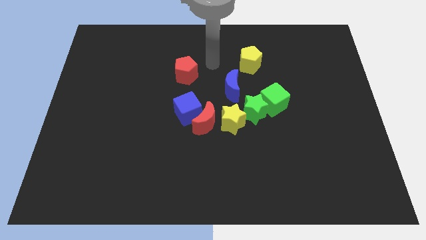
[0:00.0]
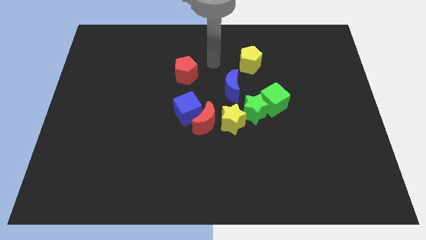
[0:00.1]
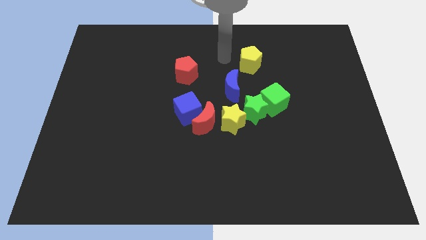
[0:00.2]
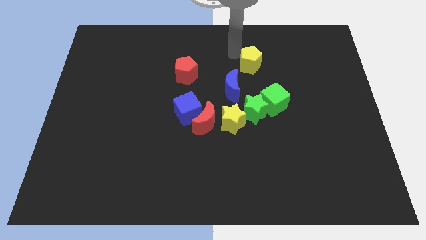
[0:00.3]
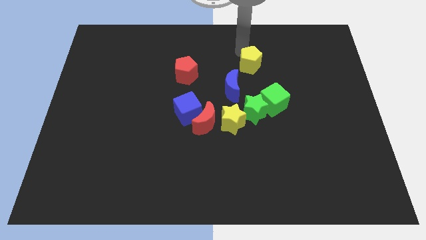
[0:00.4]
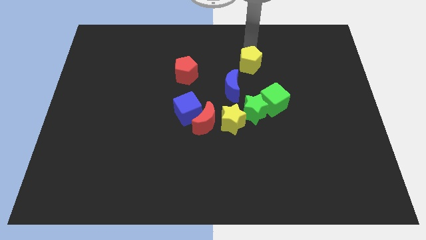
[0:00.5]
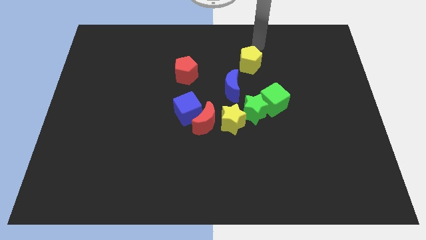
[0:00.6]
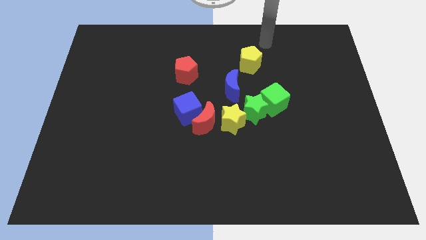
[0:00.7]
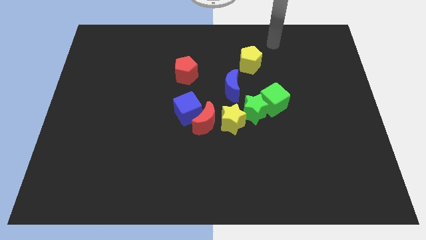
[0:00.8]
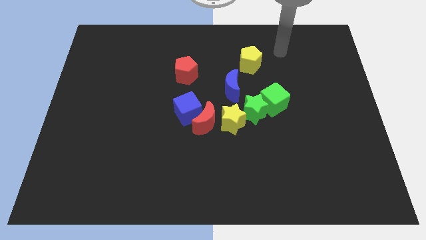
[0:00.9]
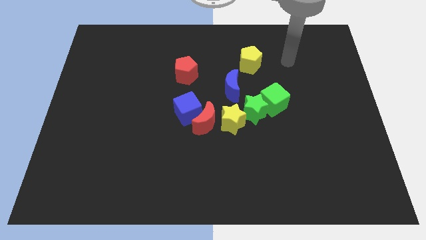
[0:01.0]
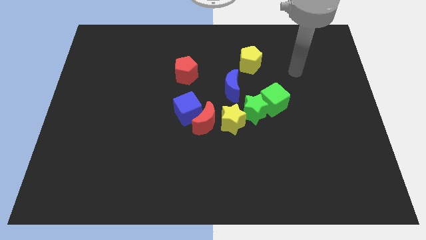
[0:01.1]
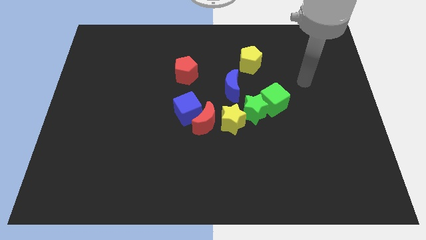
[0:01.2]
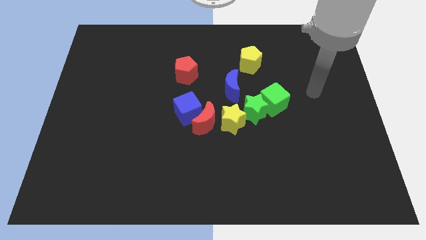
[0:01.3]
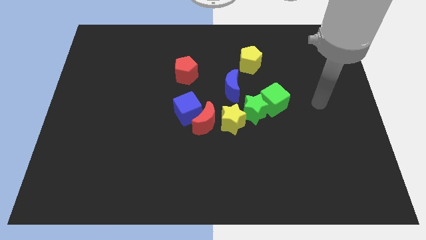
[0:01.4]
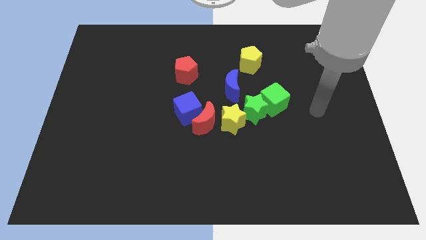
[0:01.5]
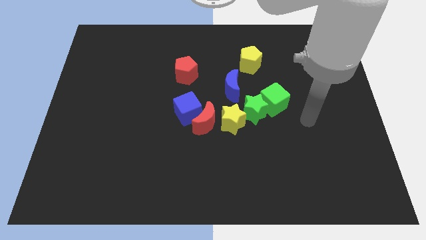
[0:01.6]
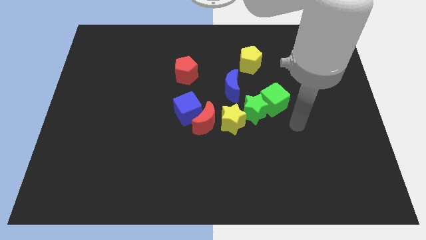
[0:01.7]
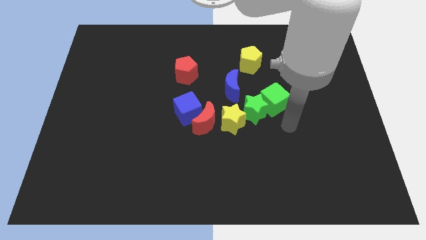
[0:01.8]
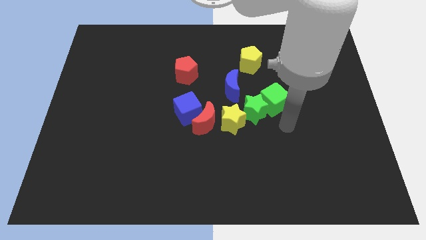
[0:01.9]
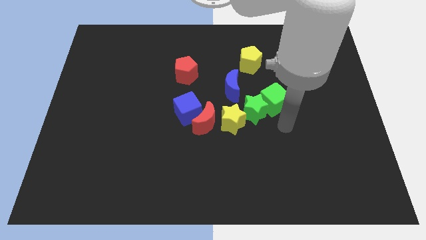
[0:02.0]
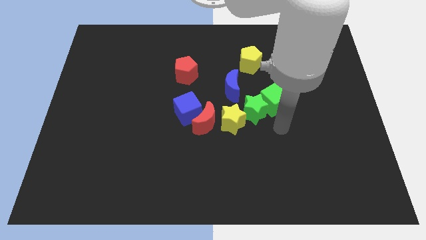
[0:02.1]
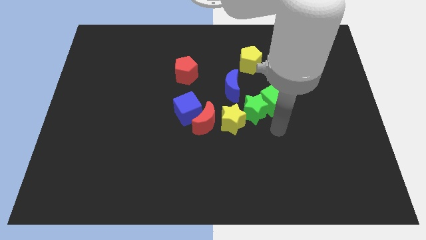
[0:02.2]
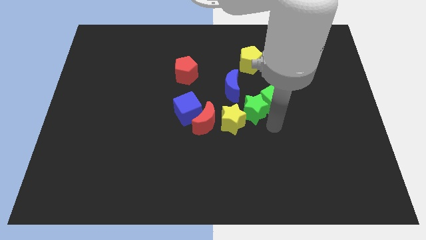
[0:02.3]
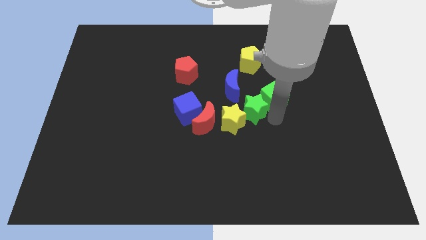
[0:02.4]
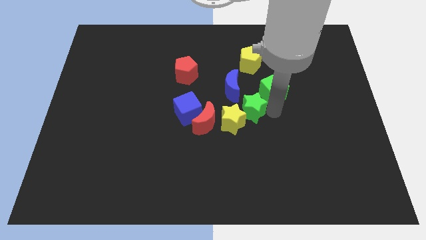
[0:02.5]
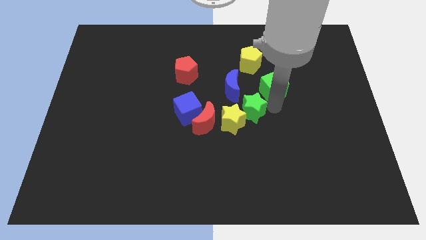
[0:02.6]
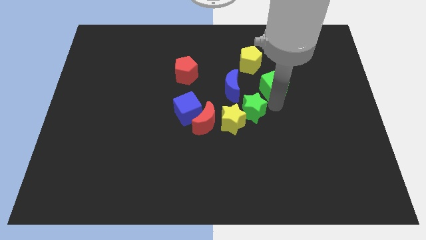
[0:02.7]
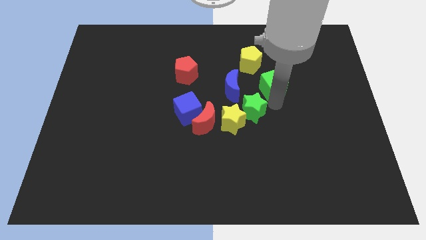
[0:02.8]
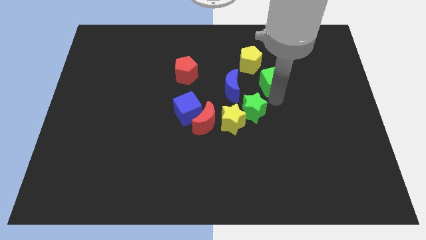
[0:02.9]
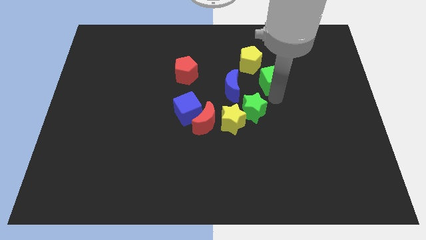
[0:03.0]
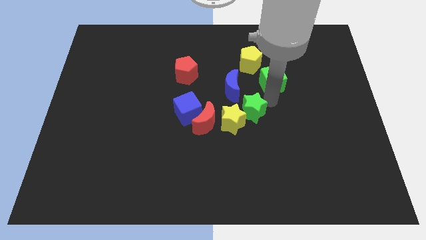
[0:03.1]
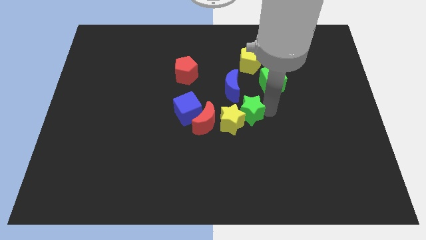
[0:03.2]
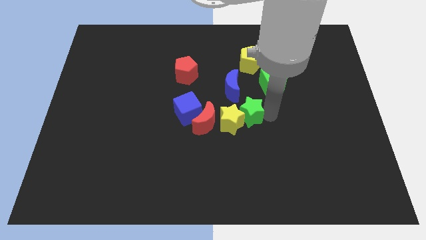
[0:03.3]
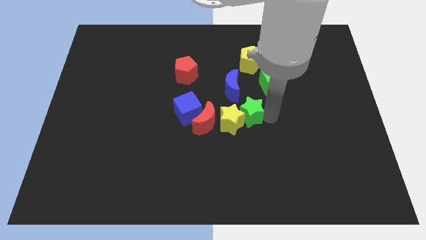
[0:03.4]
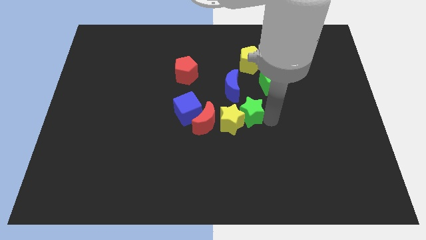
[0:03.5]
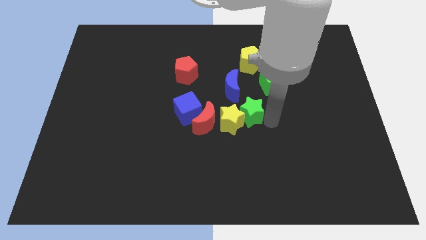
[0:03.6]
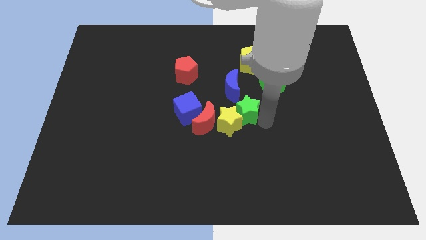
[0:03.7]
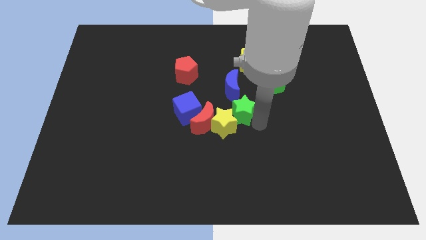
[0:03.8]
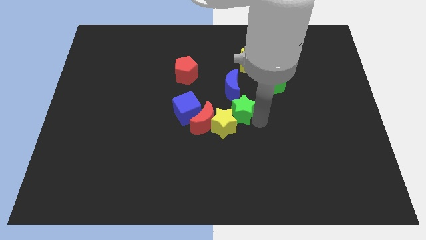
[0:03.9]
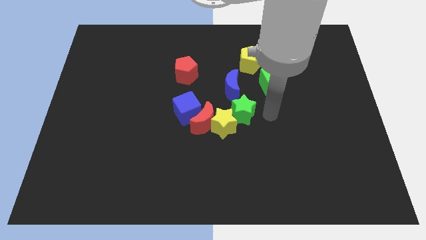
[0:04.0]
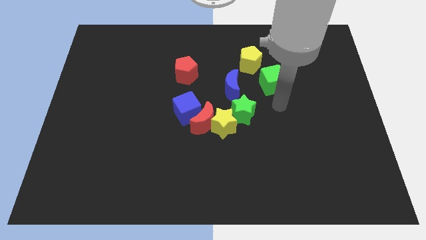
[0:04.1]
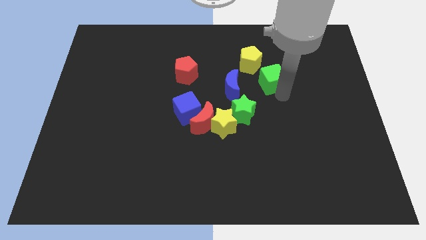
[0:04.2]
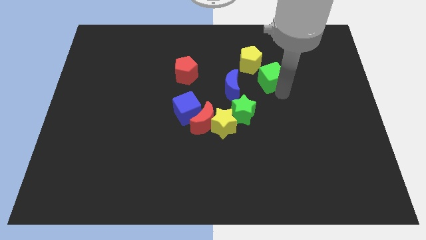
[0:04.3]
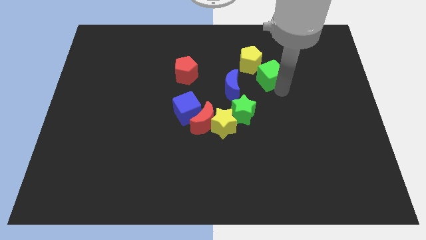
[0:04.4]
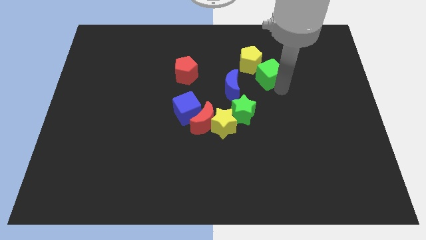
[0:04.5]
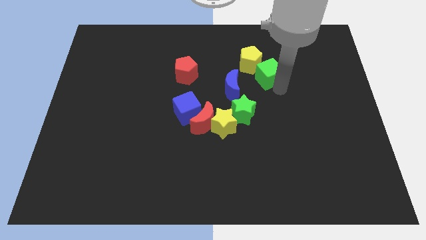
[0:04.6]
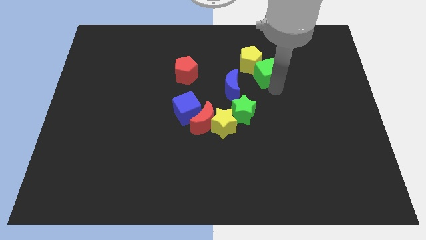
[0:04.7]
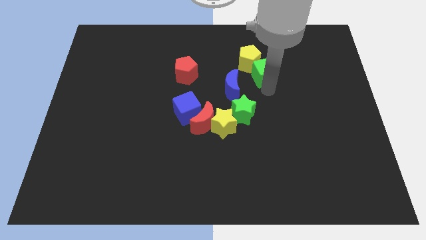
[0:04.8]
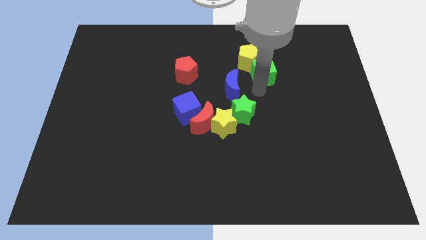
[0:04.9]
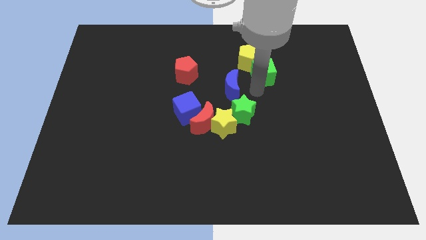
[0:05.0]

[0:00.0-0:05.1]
move the green cube into the bottom side of the yellow pentagon

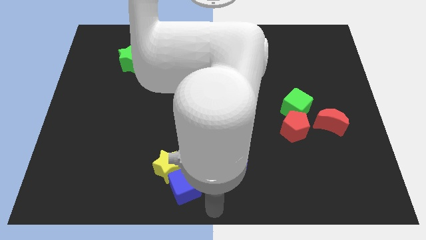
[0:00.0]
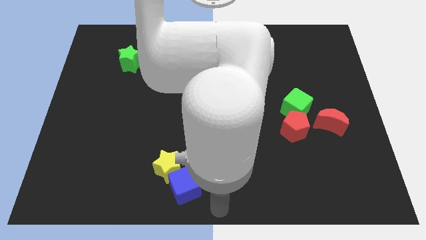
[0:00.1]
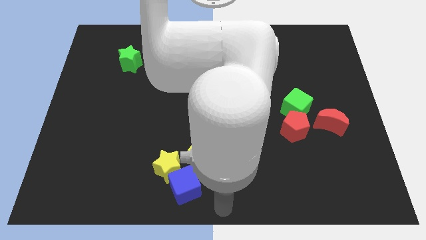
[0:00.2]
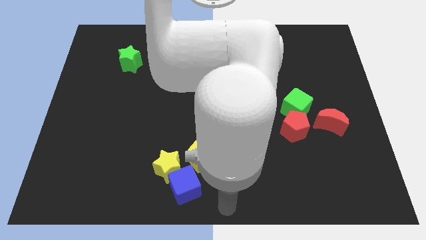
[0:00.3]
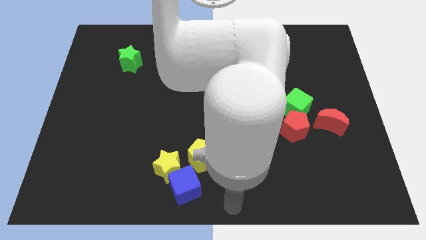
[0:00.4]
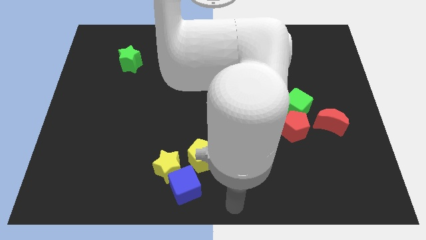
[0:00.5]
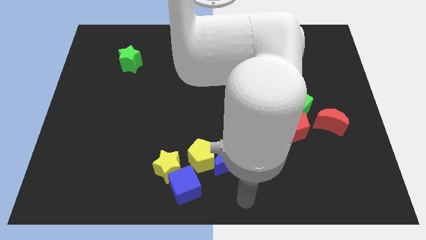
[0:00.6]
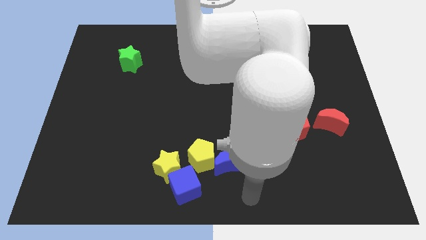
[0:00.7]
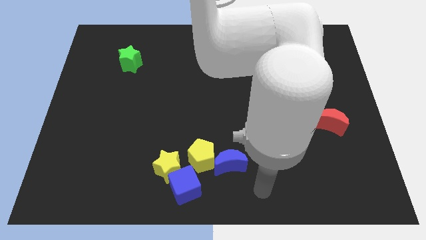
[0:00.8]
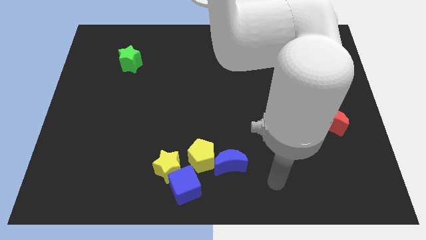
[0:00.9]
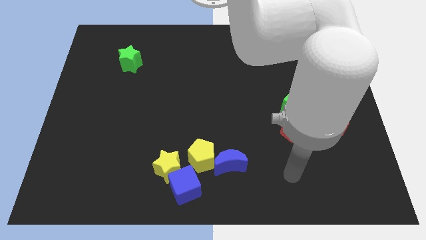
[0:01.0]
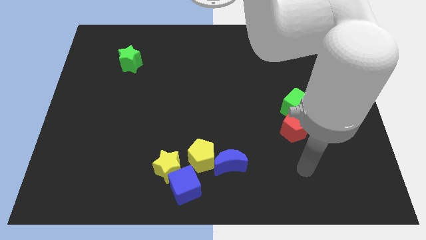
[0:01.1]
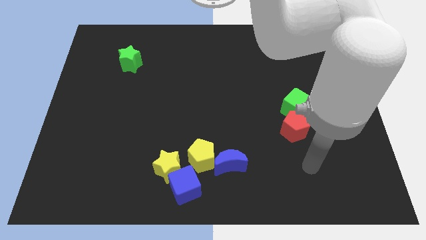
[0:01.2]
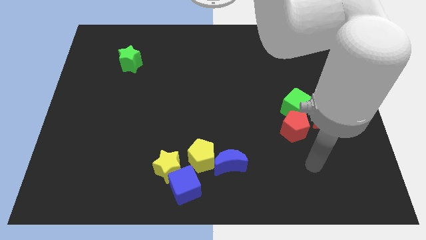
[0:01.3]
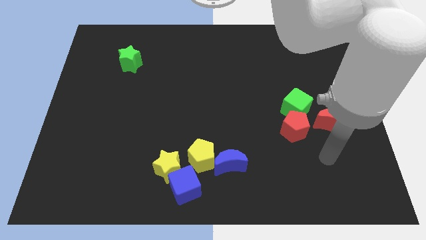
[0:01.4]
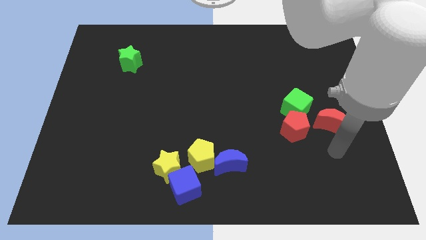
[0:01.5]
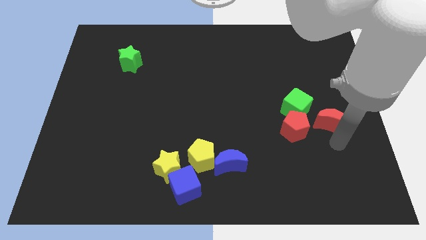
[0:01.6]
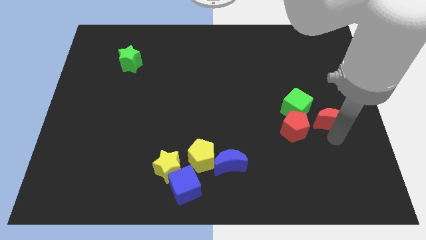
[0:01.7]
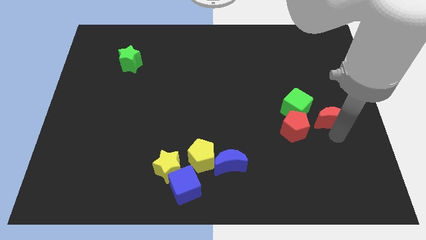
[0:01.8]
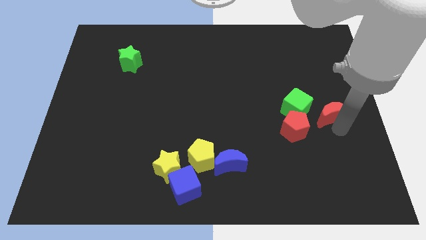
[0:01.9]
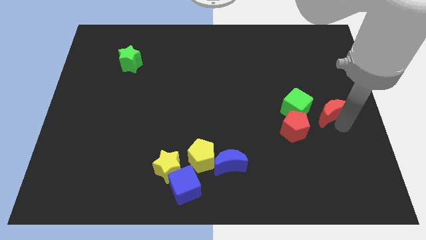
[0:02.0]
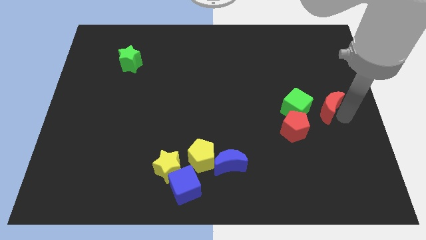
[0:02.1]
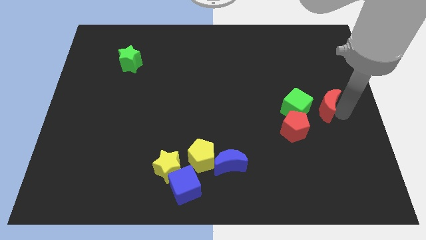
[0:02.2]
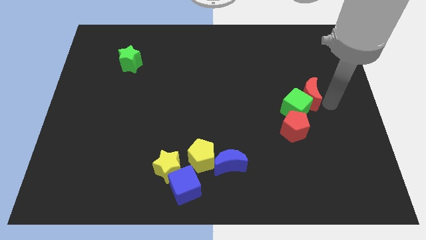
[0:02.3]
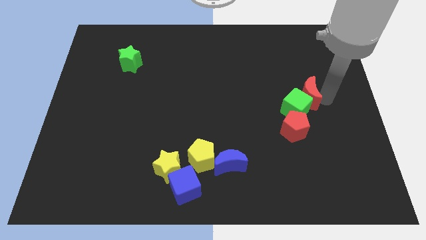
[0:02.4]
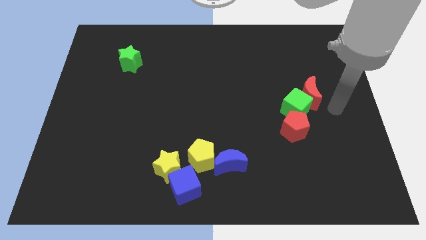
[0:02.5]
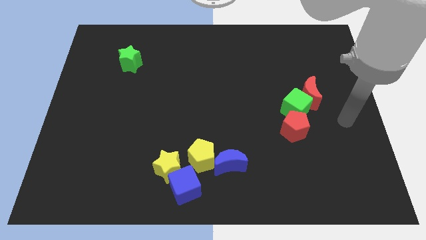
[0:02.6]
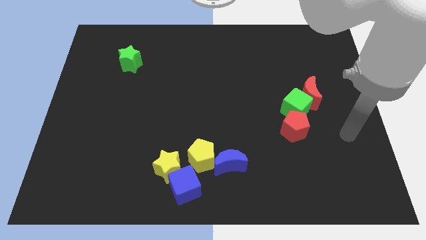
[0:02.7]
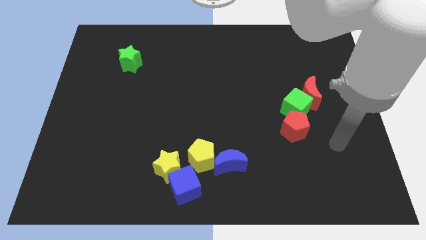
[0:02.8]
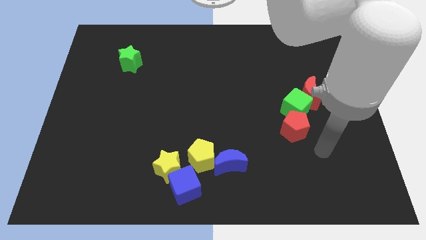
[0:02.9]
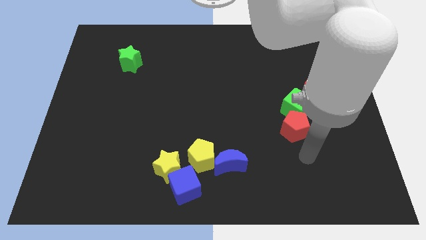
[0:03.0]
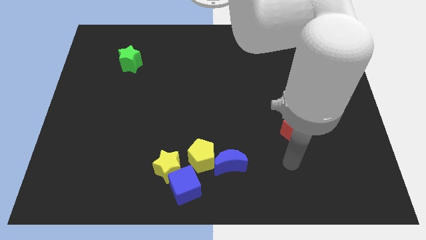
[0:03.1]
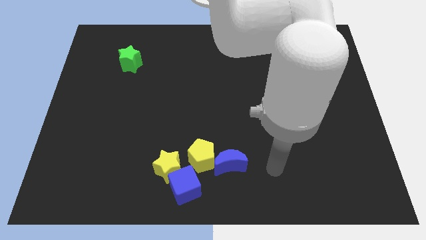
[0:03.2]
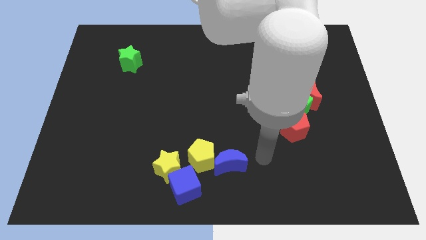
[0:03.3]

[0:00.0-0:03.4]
push the red moon slightly upward

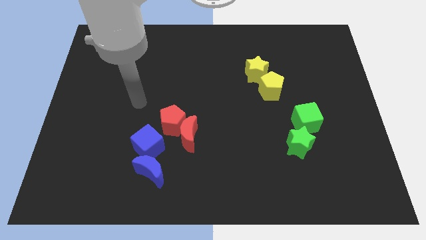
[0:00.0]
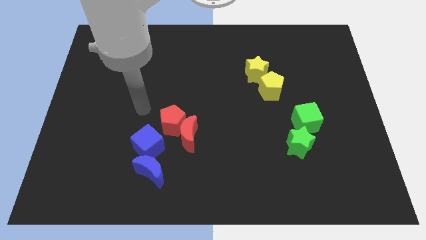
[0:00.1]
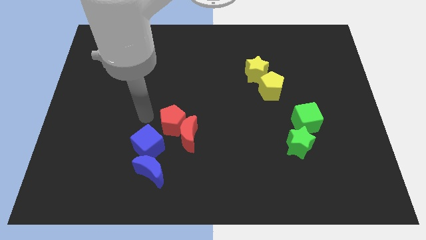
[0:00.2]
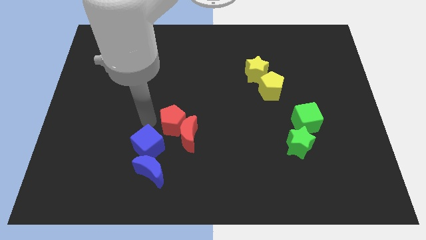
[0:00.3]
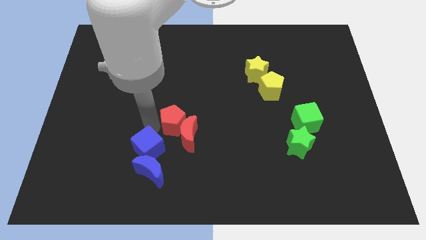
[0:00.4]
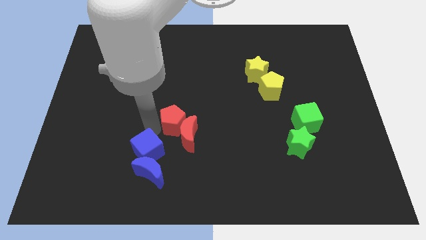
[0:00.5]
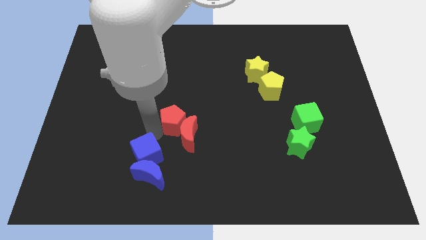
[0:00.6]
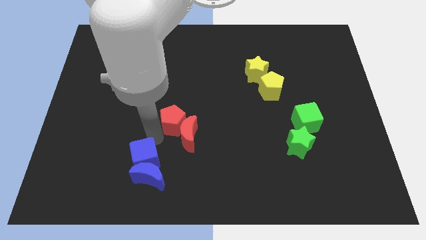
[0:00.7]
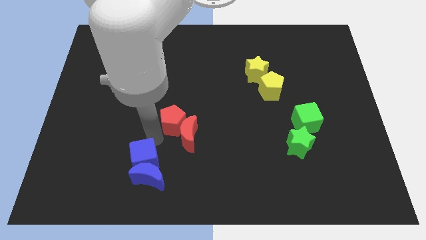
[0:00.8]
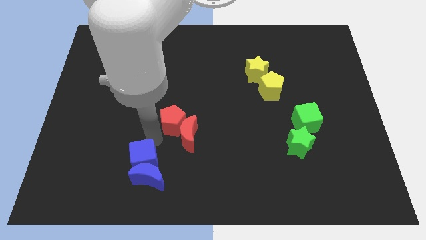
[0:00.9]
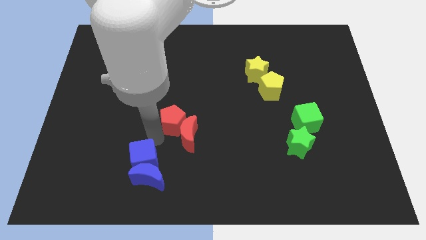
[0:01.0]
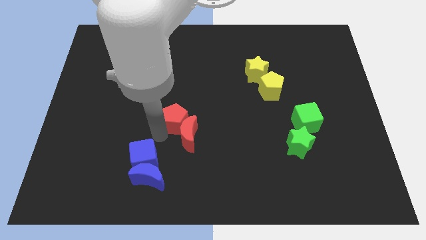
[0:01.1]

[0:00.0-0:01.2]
push the blue cube into blue moon
